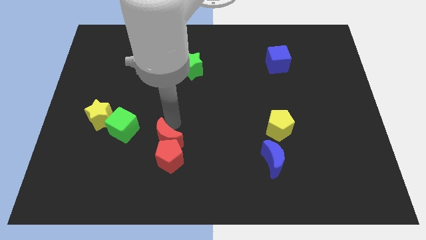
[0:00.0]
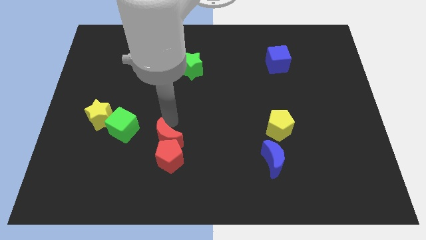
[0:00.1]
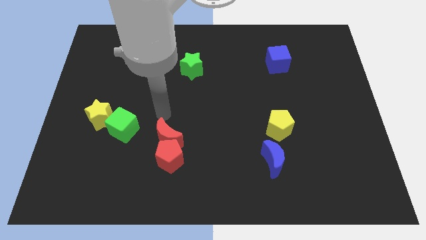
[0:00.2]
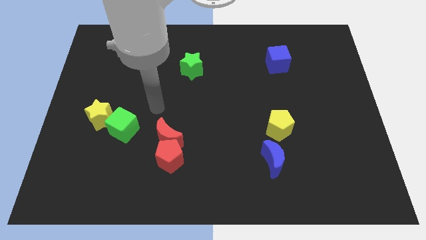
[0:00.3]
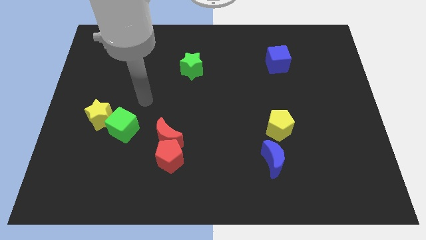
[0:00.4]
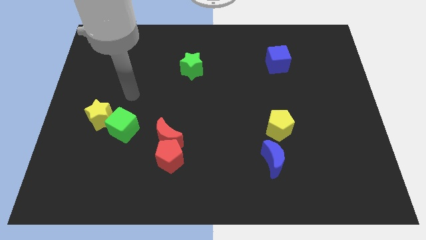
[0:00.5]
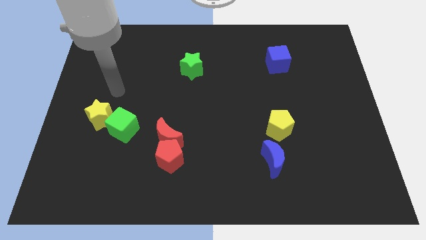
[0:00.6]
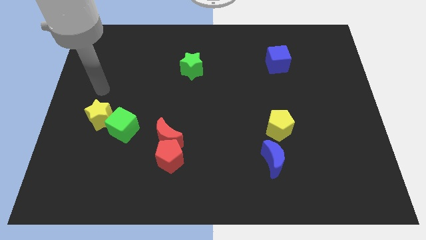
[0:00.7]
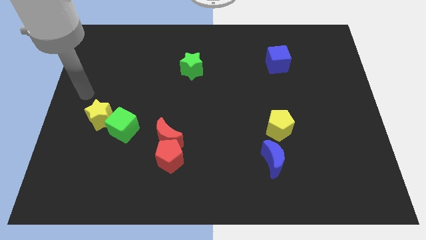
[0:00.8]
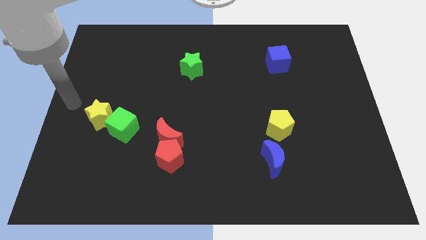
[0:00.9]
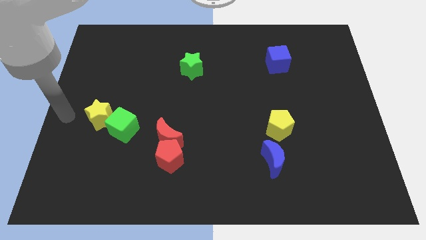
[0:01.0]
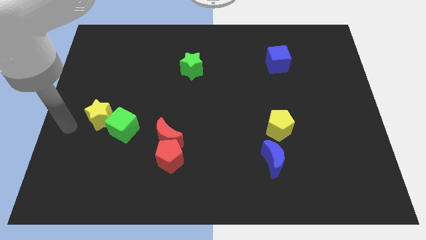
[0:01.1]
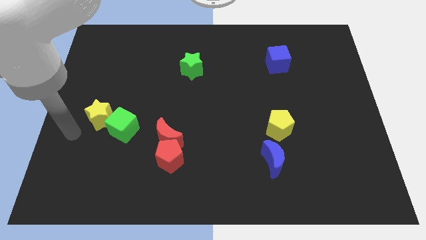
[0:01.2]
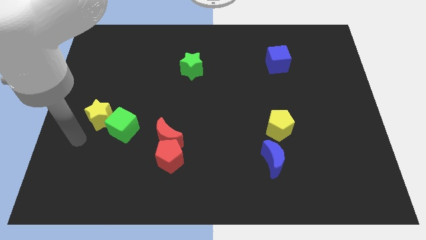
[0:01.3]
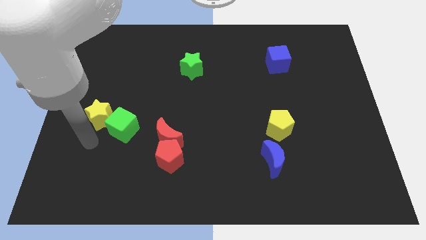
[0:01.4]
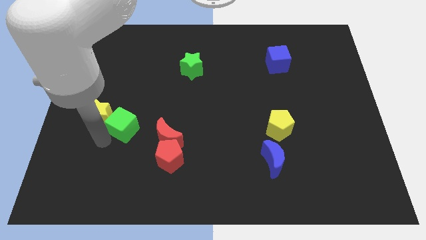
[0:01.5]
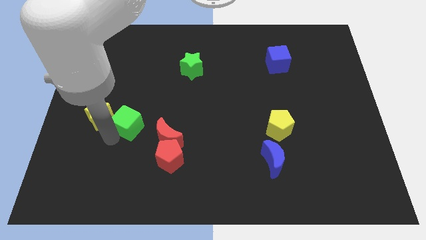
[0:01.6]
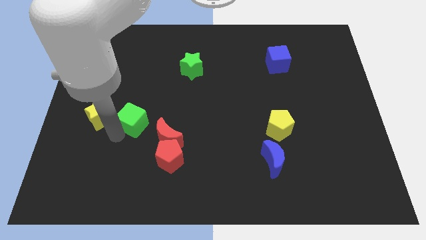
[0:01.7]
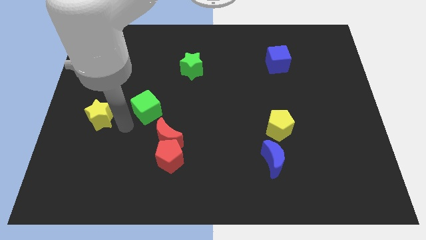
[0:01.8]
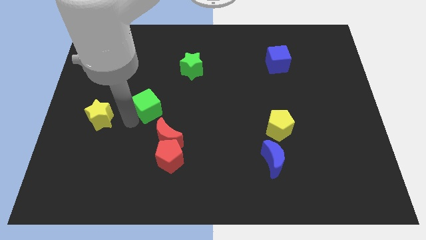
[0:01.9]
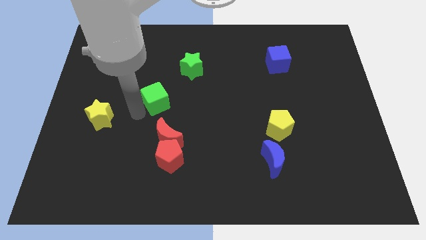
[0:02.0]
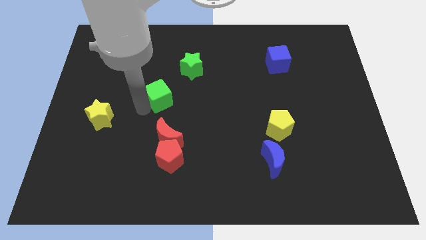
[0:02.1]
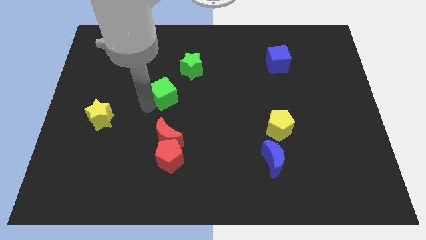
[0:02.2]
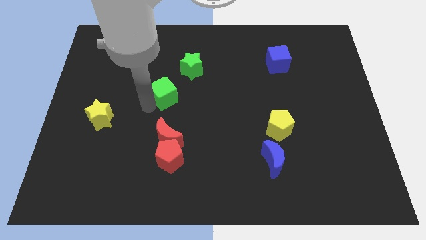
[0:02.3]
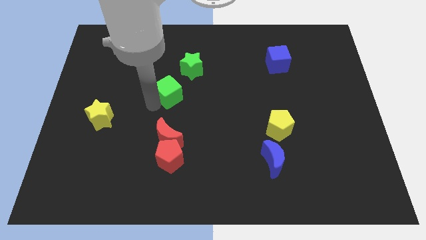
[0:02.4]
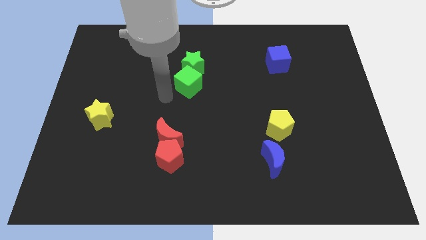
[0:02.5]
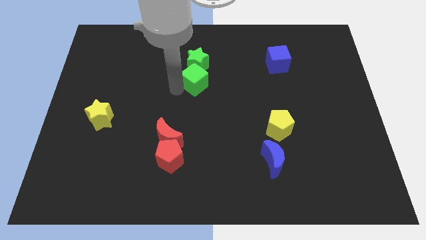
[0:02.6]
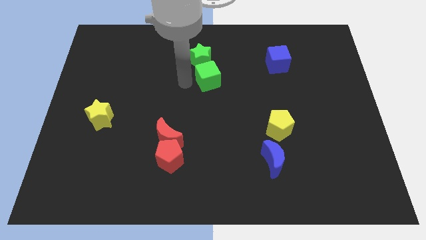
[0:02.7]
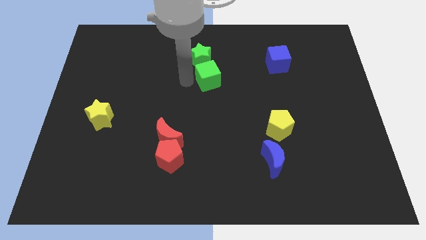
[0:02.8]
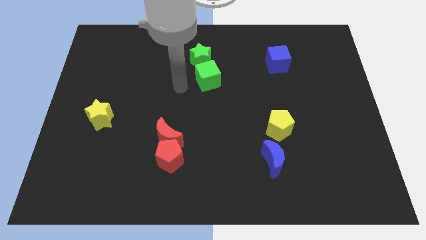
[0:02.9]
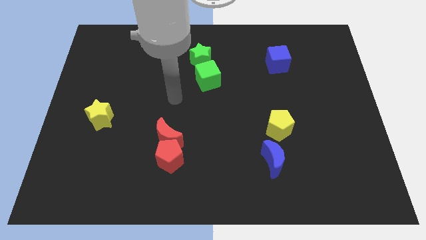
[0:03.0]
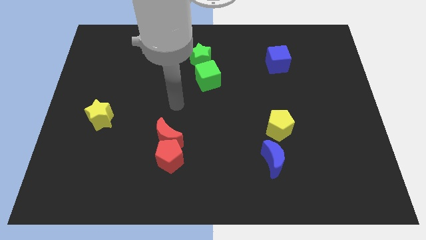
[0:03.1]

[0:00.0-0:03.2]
push the green cube down to the green star

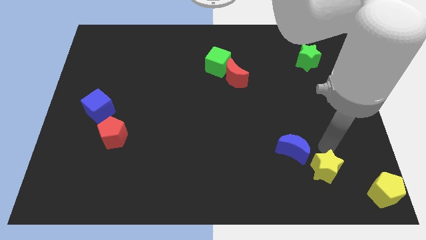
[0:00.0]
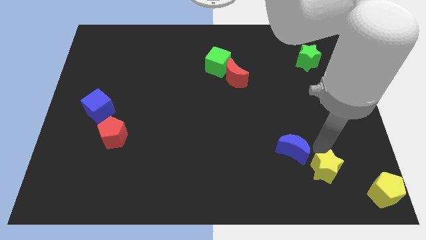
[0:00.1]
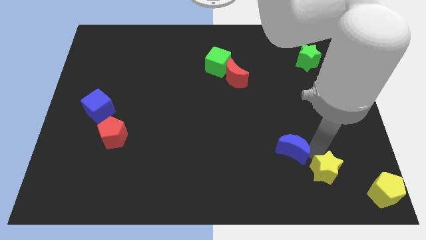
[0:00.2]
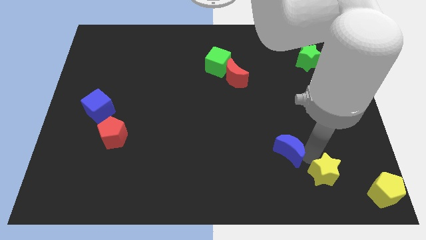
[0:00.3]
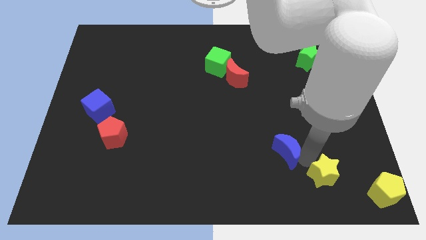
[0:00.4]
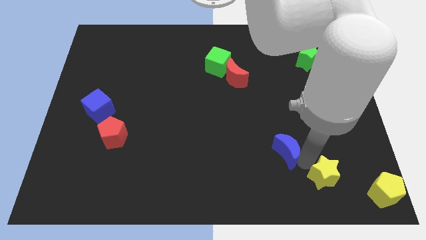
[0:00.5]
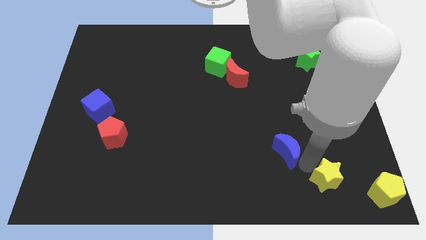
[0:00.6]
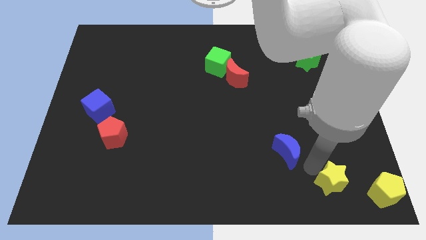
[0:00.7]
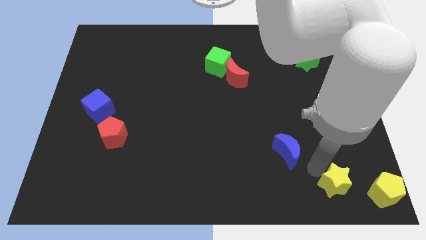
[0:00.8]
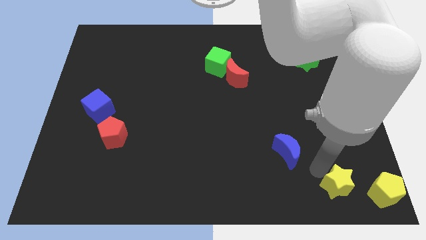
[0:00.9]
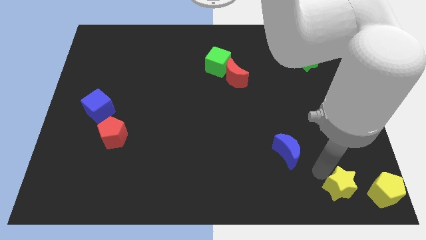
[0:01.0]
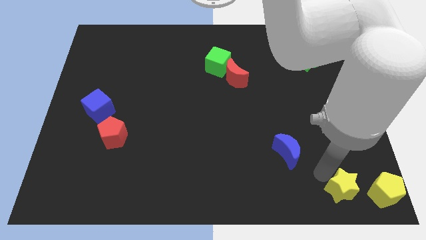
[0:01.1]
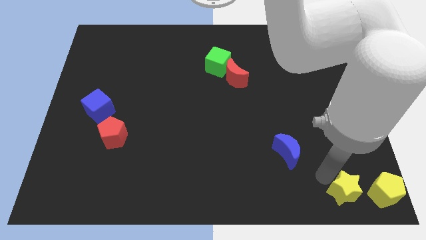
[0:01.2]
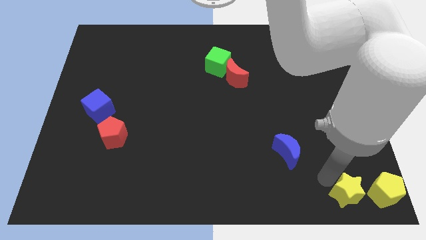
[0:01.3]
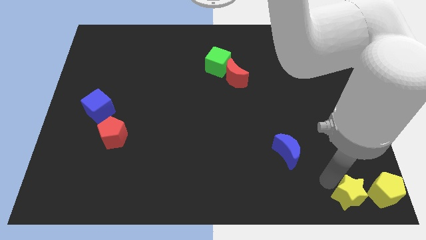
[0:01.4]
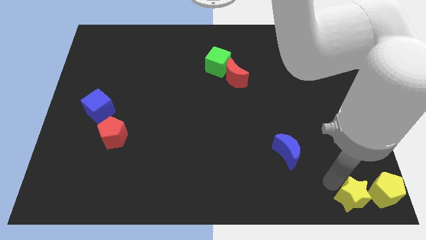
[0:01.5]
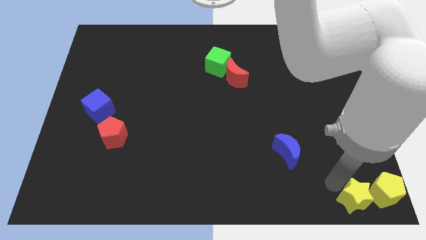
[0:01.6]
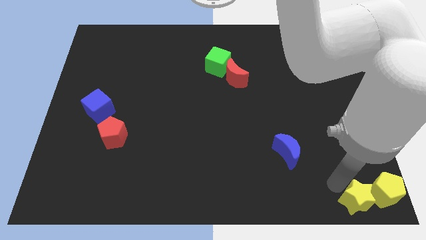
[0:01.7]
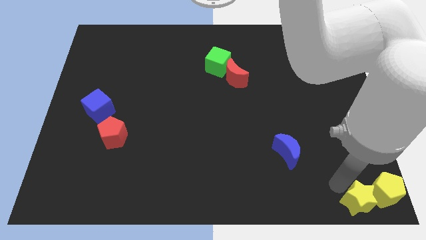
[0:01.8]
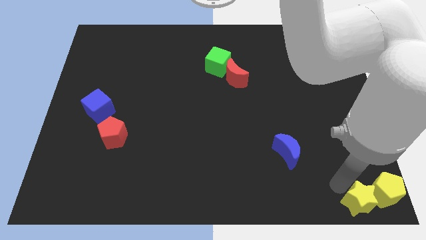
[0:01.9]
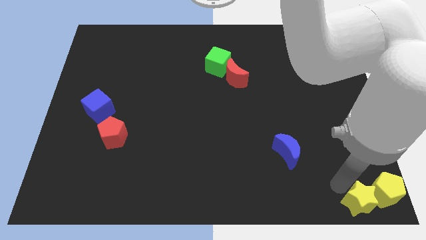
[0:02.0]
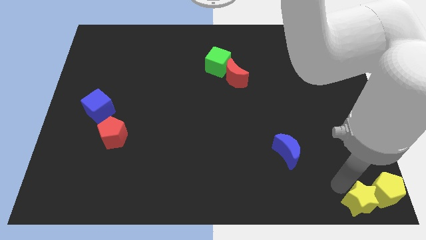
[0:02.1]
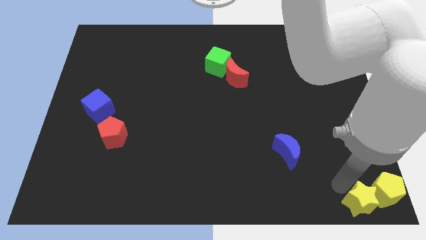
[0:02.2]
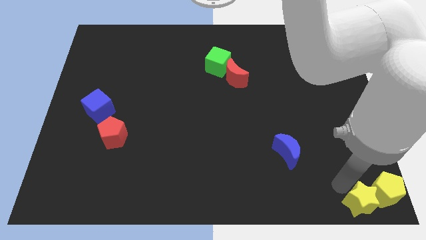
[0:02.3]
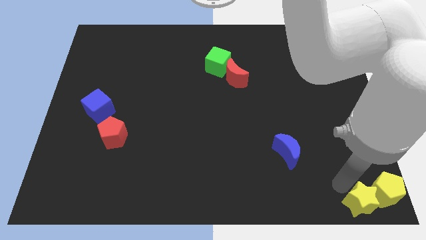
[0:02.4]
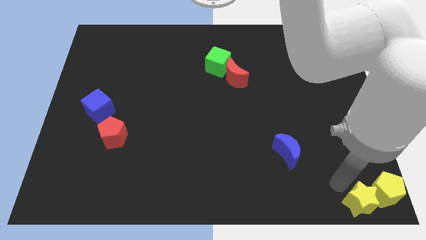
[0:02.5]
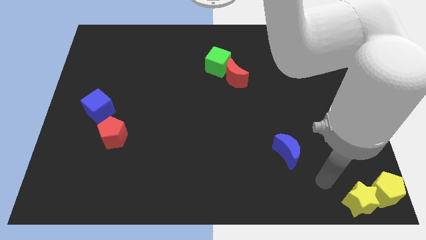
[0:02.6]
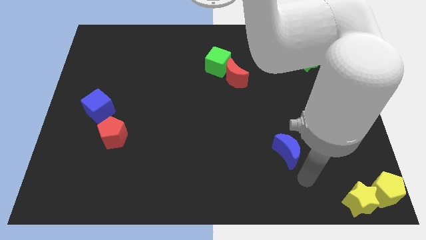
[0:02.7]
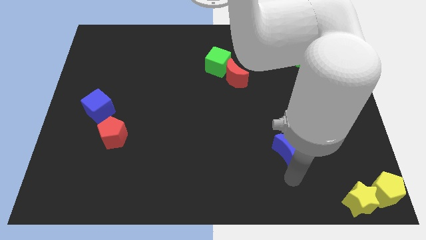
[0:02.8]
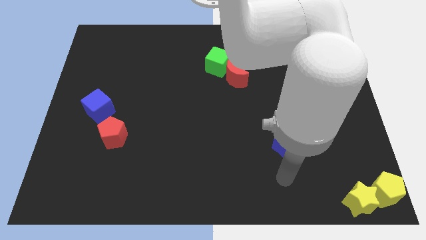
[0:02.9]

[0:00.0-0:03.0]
move yellow star to the left of the yellow pentagon

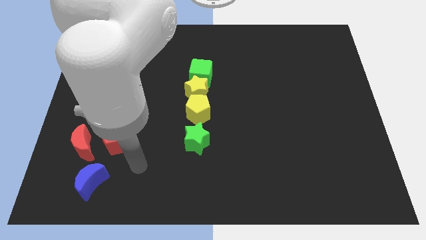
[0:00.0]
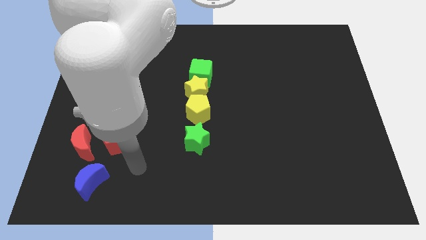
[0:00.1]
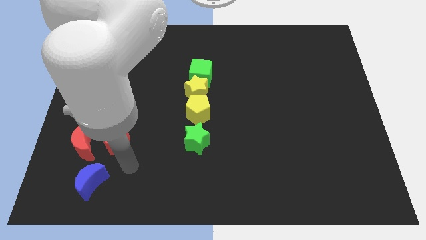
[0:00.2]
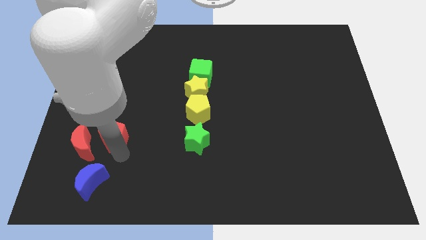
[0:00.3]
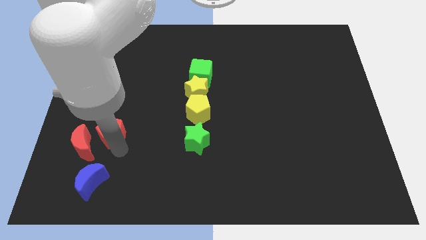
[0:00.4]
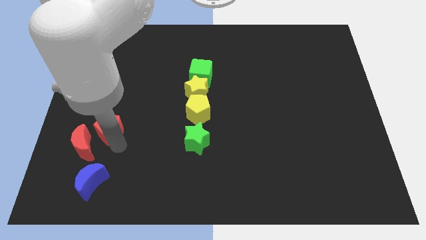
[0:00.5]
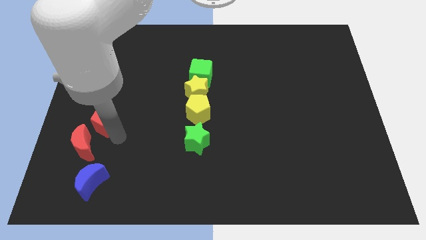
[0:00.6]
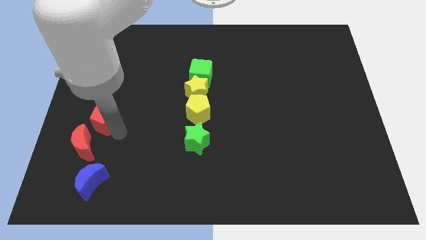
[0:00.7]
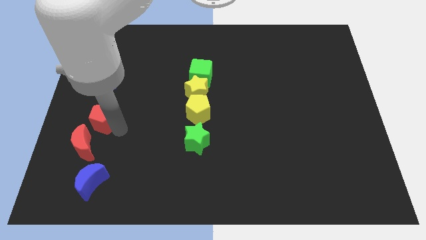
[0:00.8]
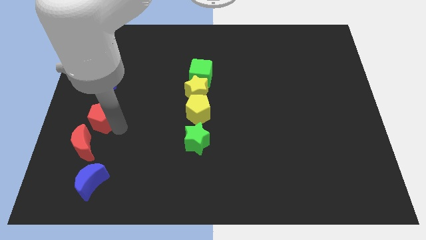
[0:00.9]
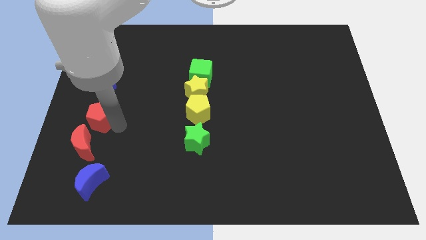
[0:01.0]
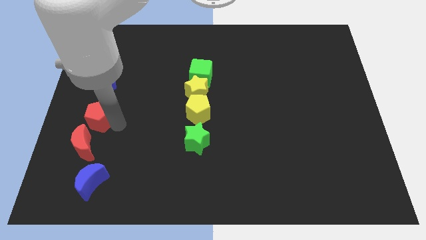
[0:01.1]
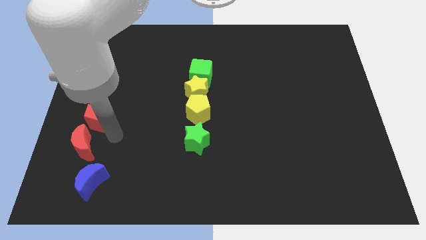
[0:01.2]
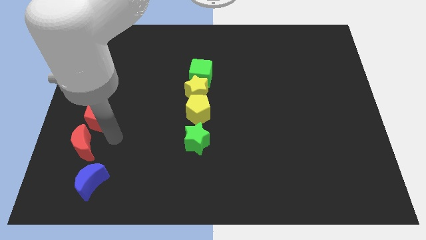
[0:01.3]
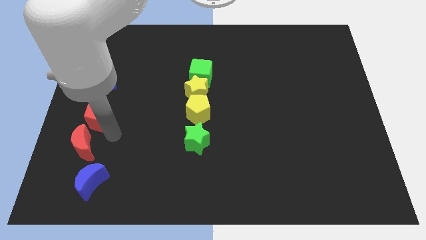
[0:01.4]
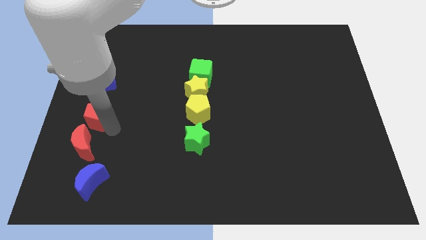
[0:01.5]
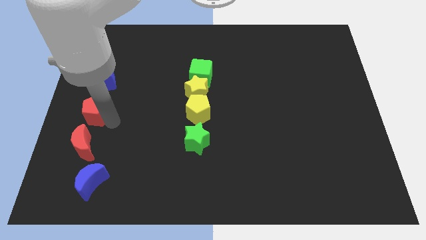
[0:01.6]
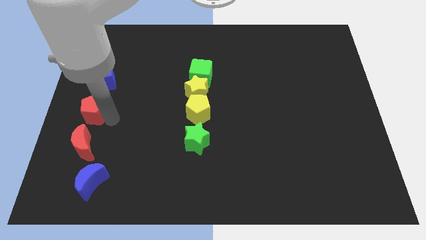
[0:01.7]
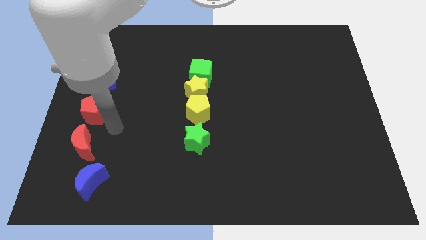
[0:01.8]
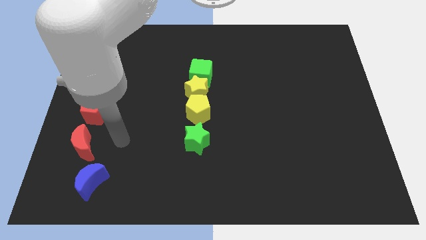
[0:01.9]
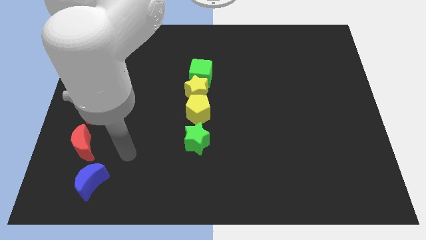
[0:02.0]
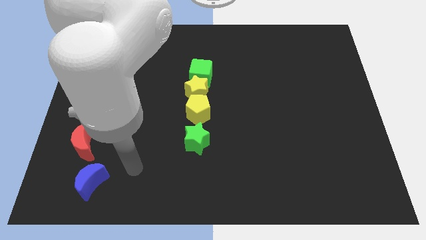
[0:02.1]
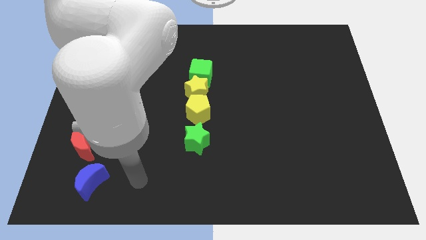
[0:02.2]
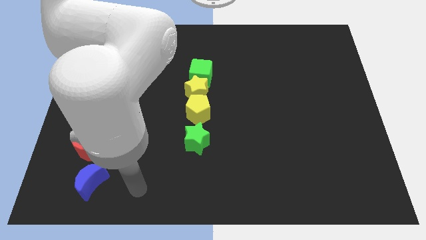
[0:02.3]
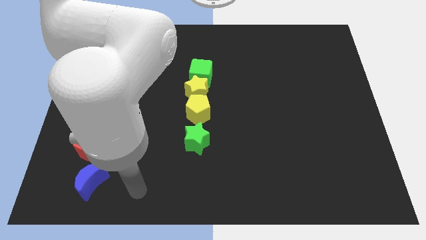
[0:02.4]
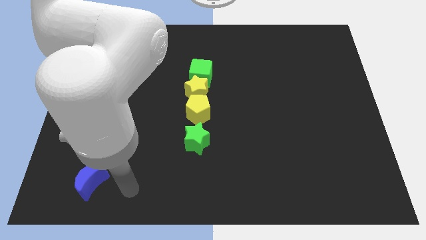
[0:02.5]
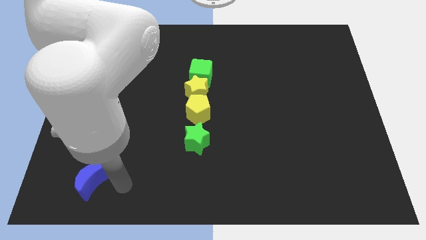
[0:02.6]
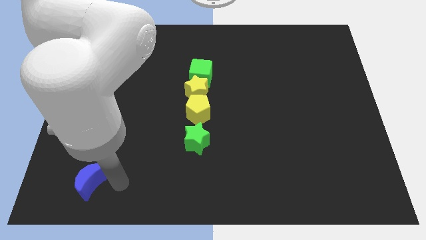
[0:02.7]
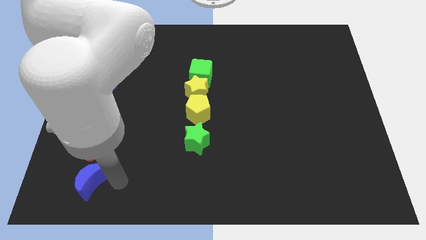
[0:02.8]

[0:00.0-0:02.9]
place the red pentagon between the red moon and blue cube
